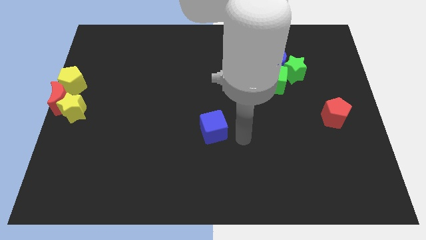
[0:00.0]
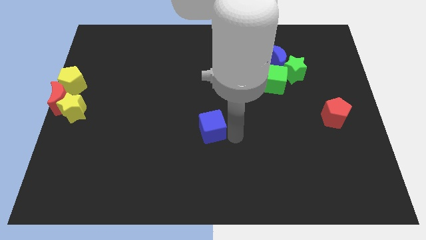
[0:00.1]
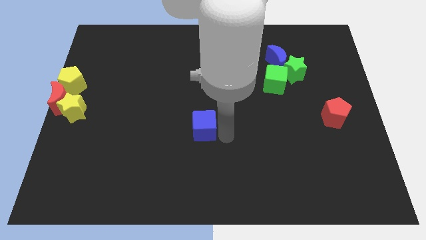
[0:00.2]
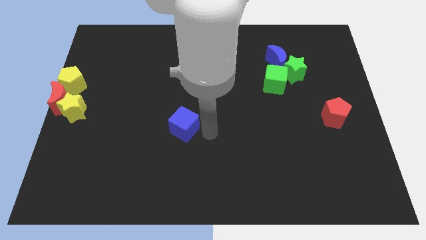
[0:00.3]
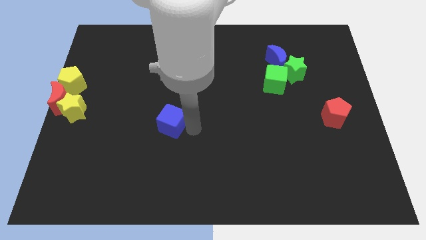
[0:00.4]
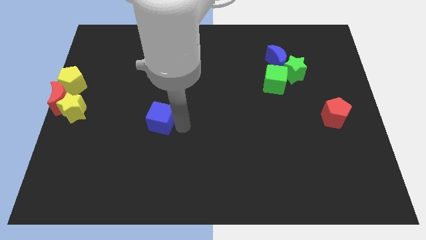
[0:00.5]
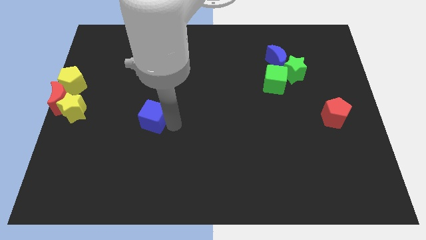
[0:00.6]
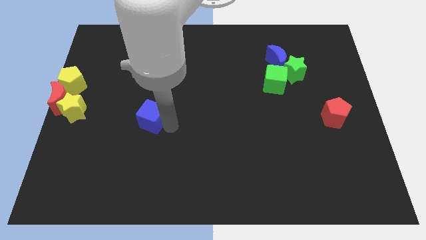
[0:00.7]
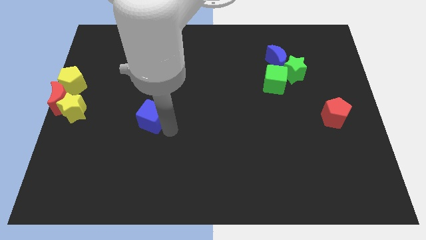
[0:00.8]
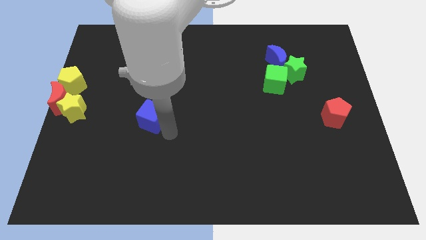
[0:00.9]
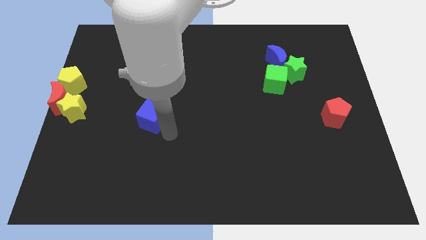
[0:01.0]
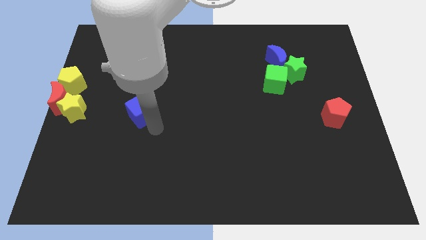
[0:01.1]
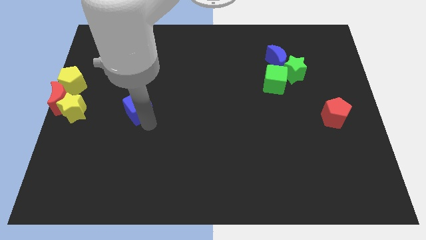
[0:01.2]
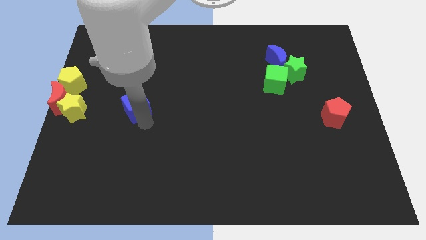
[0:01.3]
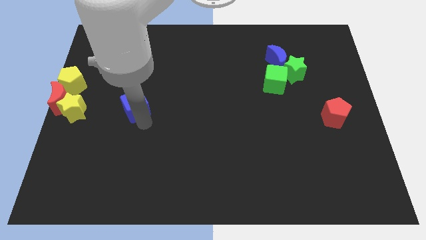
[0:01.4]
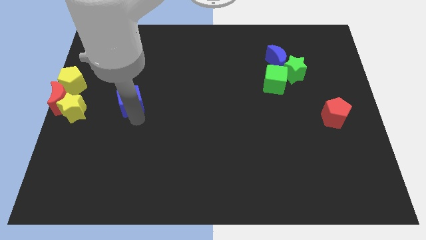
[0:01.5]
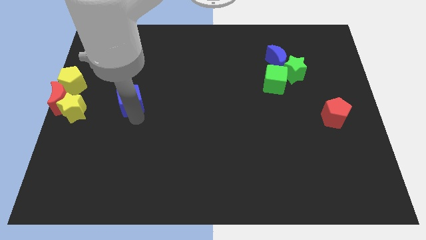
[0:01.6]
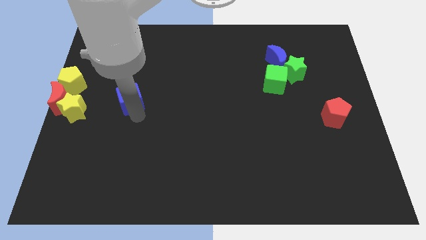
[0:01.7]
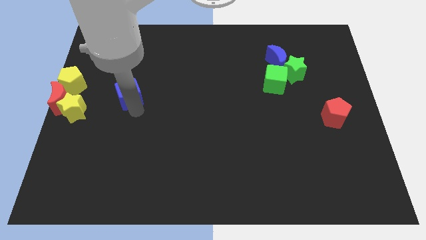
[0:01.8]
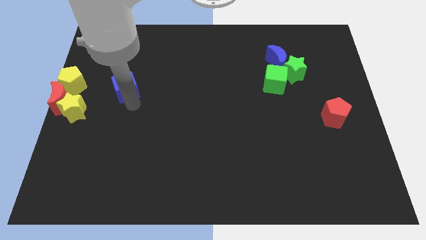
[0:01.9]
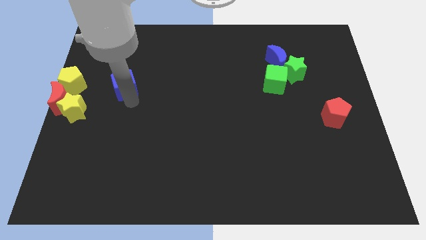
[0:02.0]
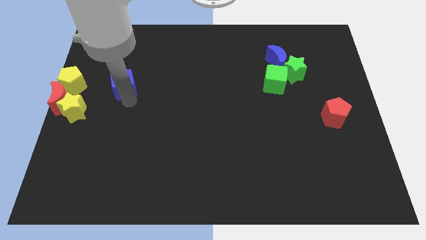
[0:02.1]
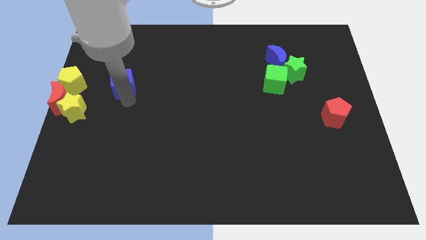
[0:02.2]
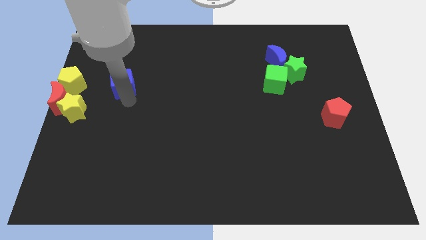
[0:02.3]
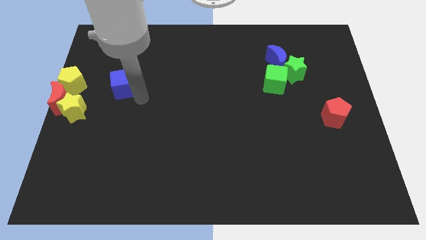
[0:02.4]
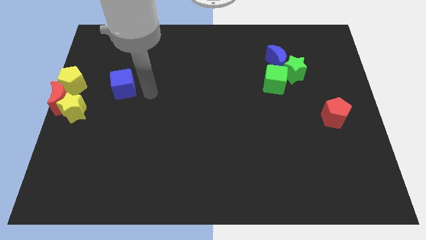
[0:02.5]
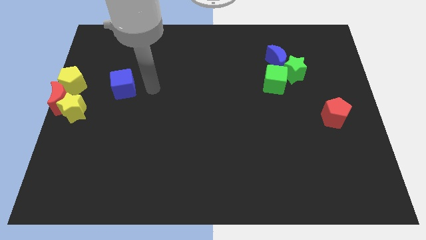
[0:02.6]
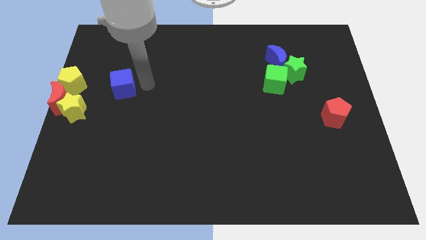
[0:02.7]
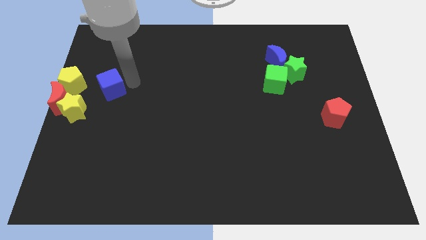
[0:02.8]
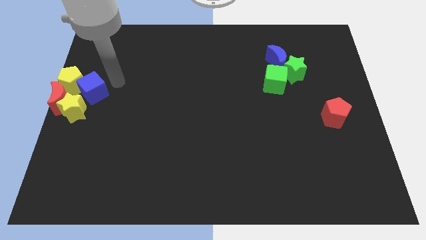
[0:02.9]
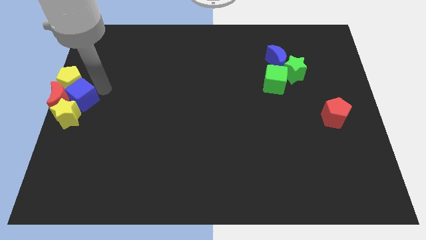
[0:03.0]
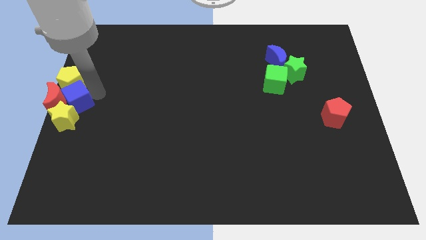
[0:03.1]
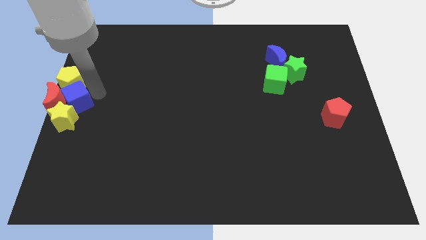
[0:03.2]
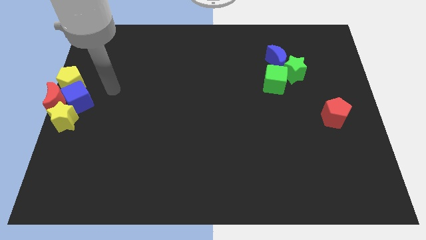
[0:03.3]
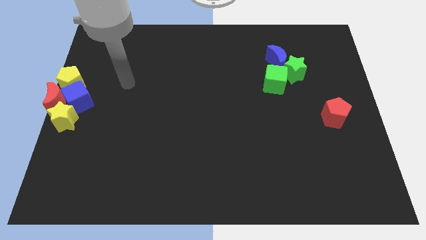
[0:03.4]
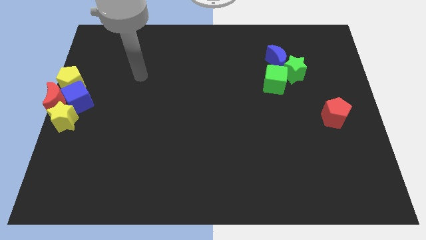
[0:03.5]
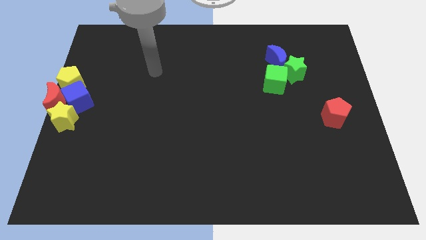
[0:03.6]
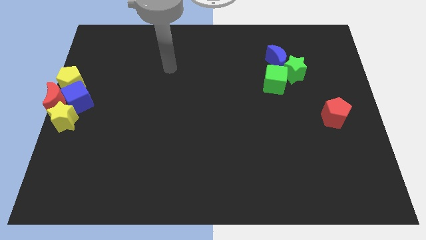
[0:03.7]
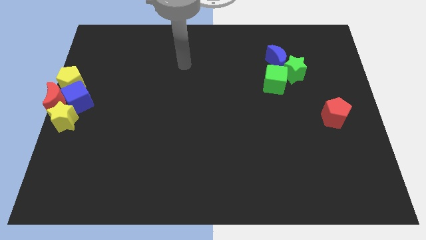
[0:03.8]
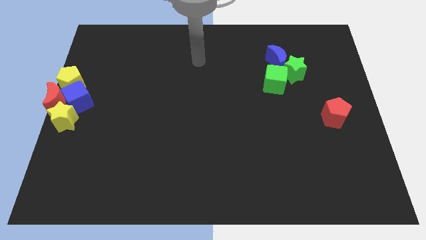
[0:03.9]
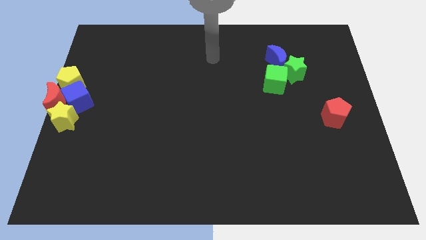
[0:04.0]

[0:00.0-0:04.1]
place a blue cube into the red crescent

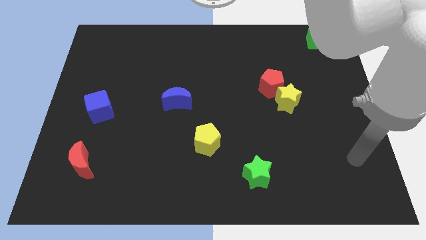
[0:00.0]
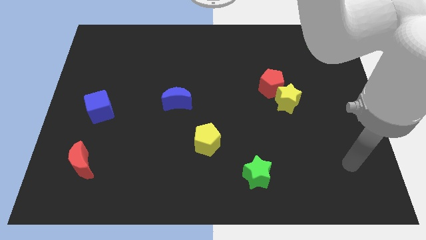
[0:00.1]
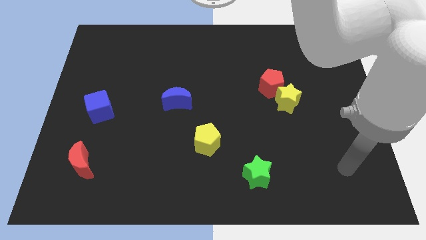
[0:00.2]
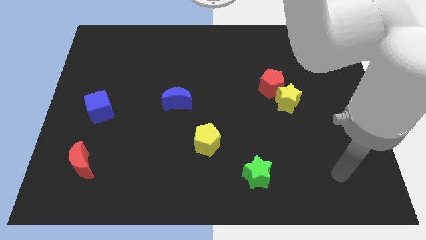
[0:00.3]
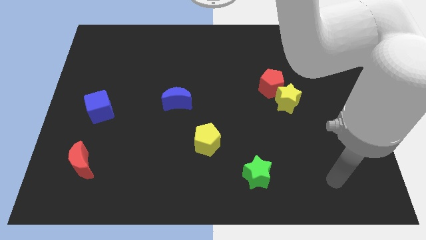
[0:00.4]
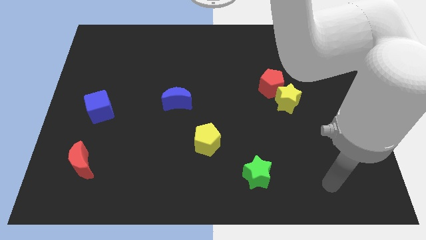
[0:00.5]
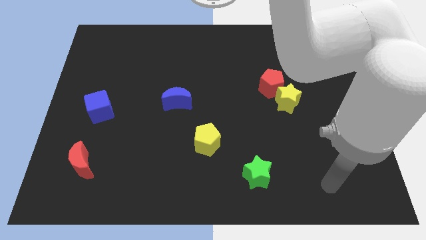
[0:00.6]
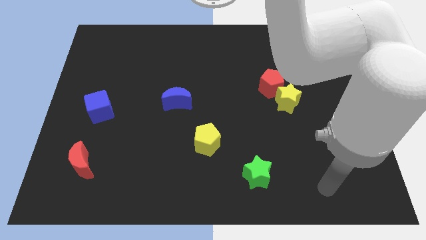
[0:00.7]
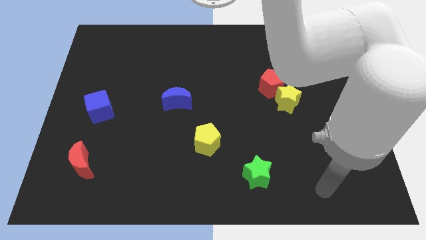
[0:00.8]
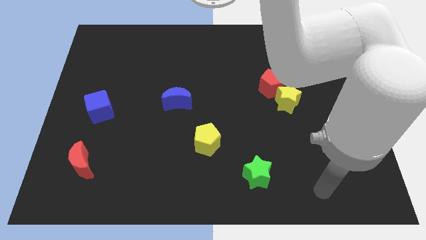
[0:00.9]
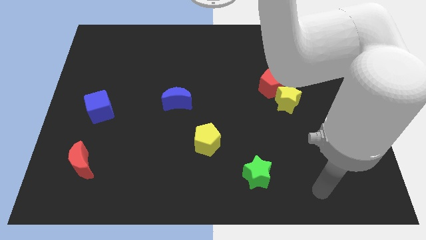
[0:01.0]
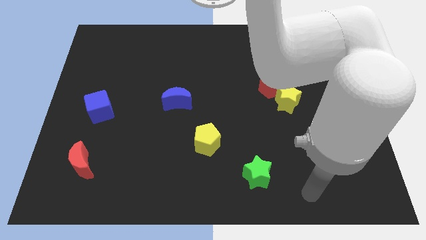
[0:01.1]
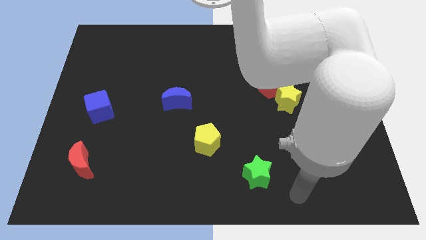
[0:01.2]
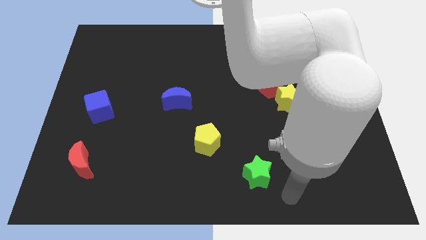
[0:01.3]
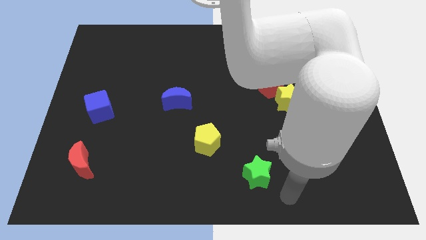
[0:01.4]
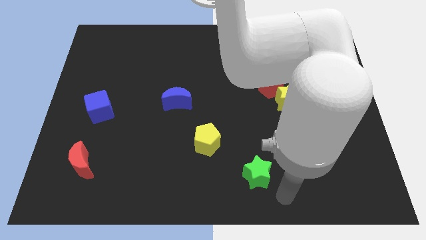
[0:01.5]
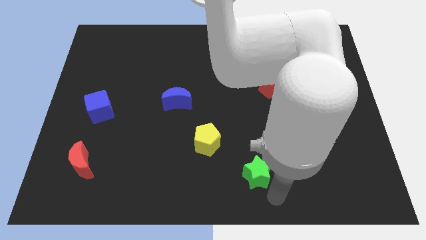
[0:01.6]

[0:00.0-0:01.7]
move the arm away from the green star

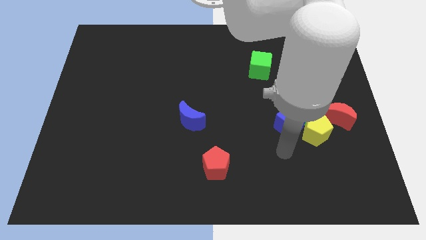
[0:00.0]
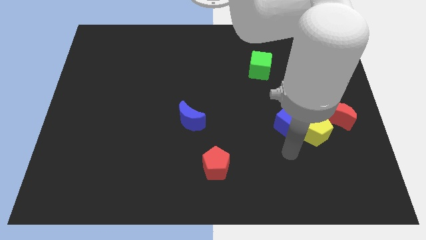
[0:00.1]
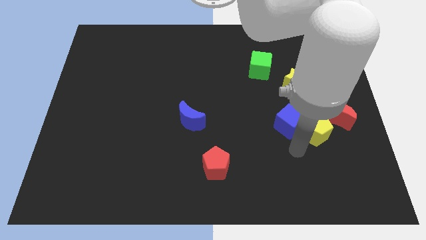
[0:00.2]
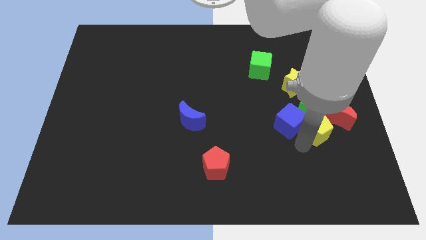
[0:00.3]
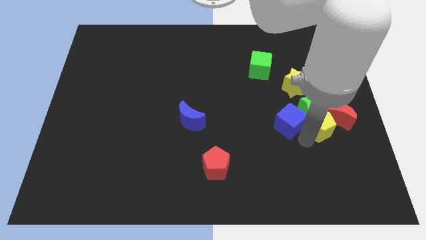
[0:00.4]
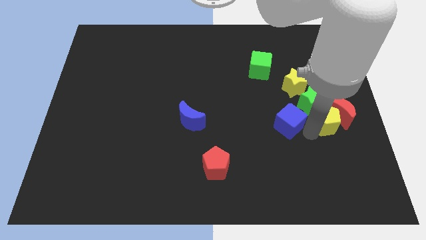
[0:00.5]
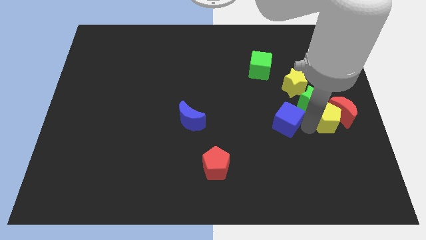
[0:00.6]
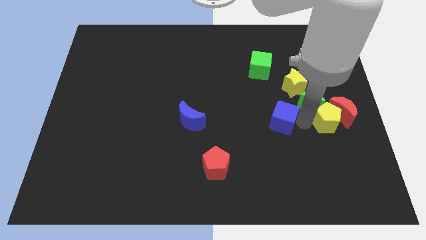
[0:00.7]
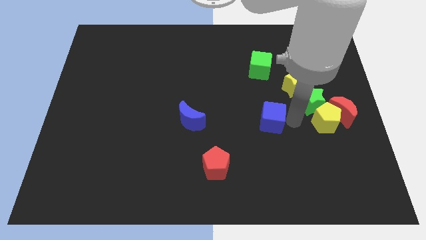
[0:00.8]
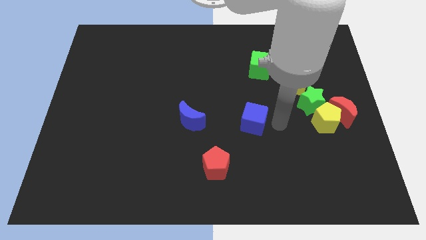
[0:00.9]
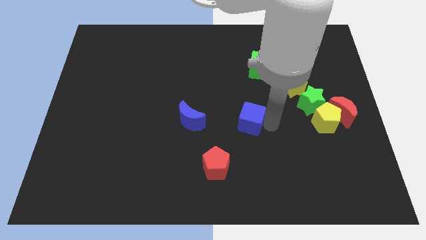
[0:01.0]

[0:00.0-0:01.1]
separate the blue cube from the group of blocks

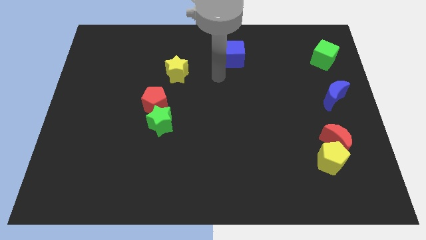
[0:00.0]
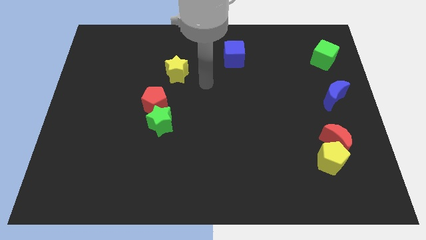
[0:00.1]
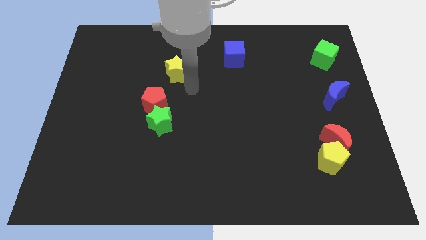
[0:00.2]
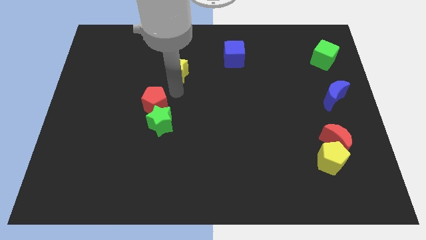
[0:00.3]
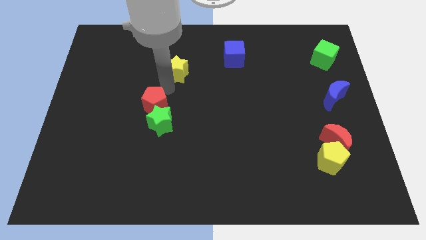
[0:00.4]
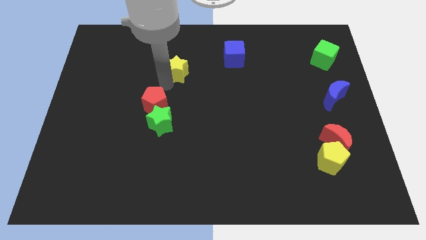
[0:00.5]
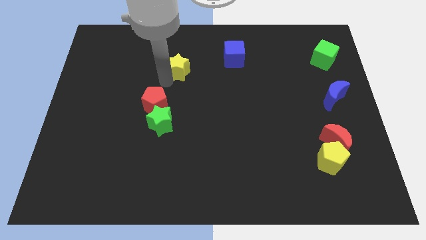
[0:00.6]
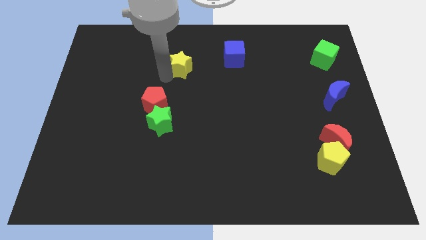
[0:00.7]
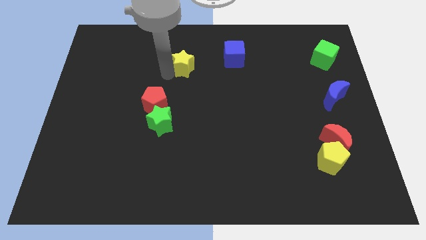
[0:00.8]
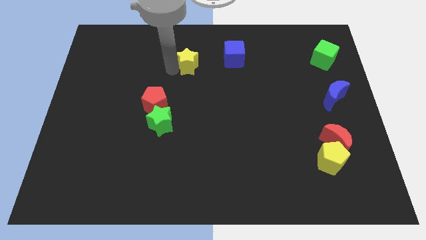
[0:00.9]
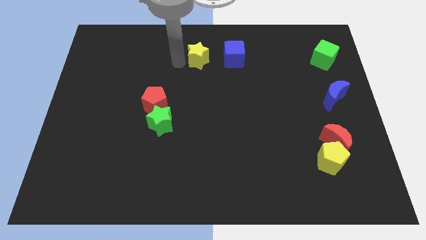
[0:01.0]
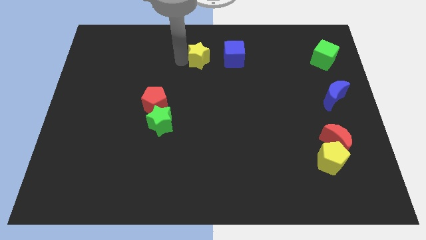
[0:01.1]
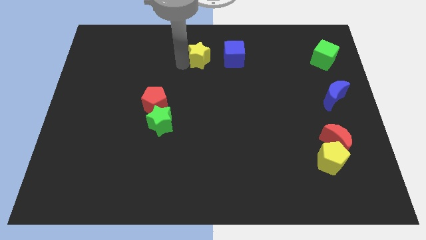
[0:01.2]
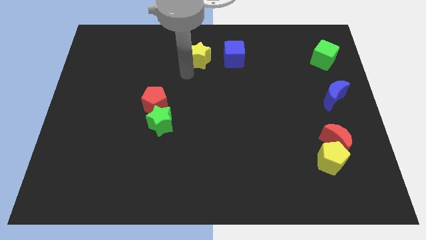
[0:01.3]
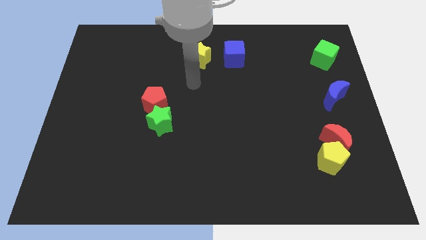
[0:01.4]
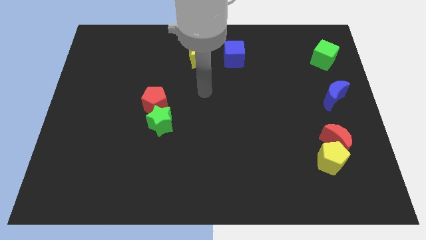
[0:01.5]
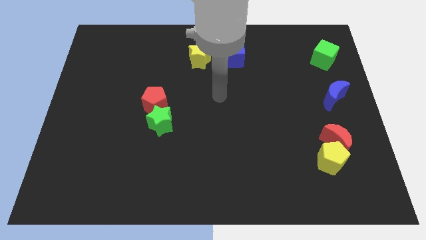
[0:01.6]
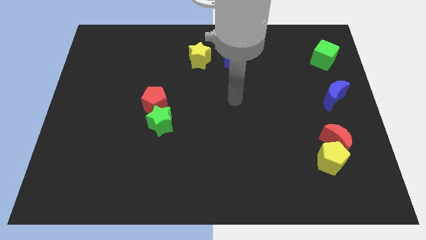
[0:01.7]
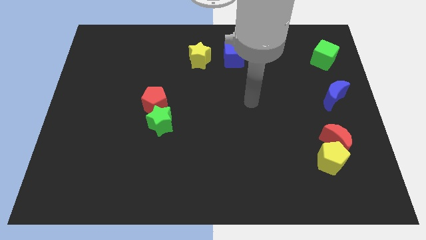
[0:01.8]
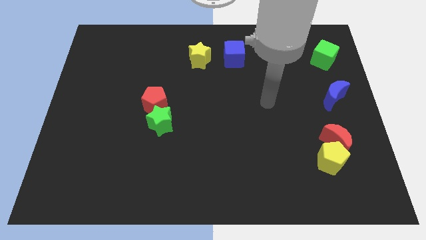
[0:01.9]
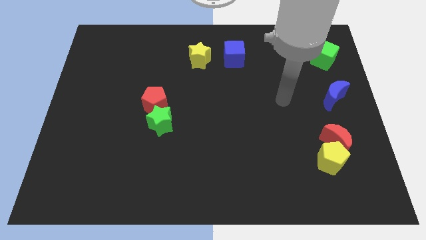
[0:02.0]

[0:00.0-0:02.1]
place the yellow star to teh left of blue cube

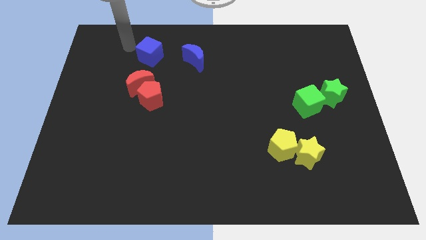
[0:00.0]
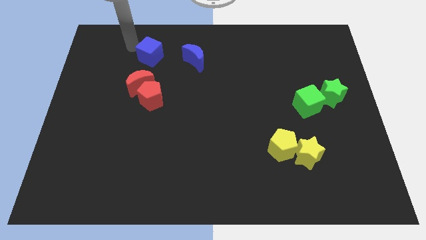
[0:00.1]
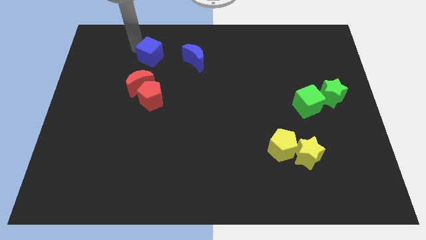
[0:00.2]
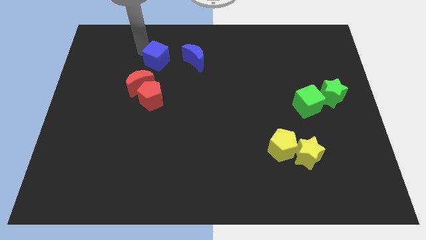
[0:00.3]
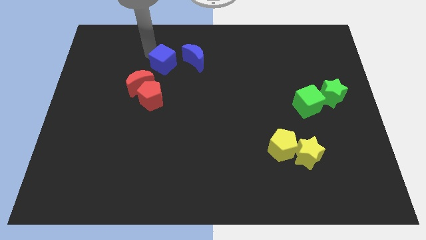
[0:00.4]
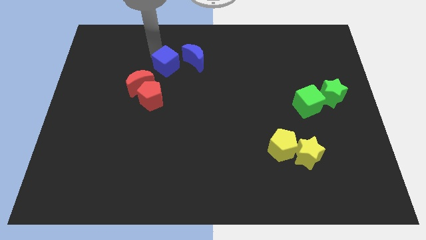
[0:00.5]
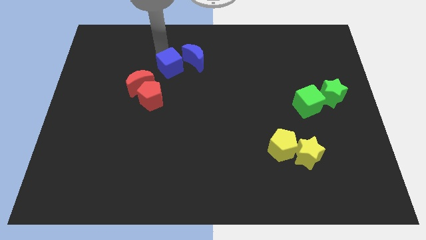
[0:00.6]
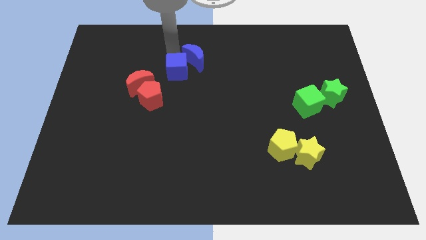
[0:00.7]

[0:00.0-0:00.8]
push blue cube beside blue crescent
